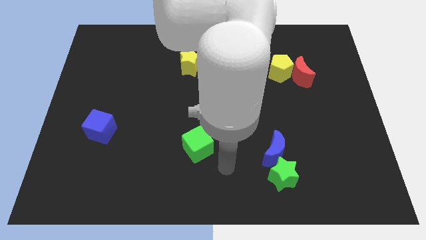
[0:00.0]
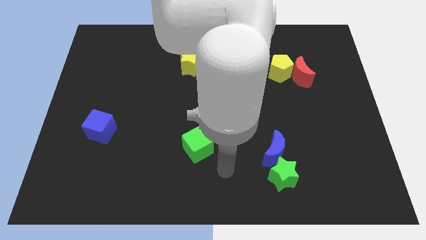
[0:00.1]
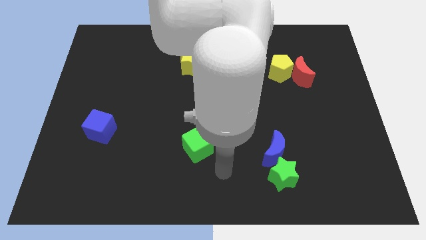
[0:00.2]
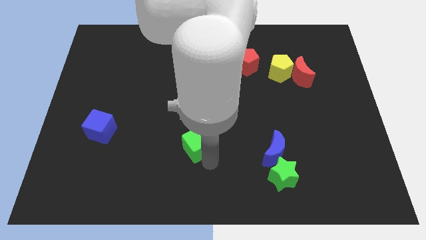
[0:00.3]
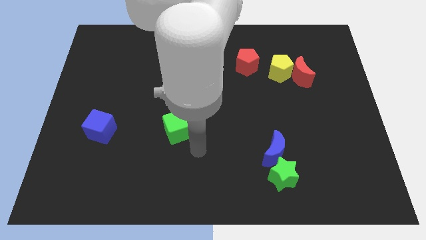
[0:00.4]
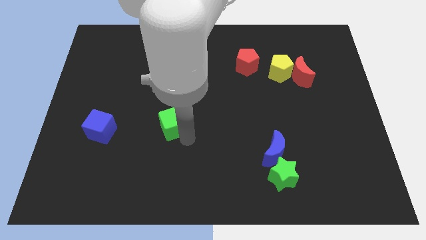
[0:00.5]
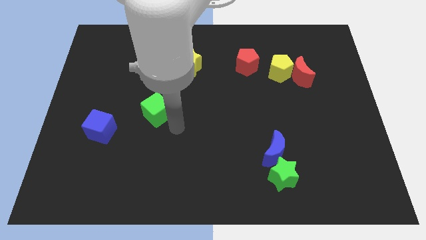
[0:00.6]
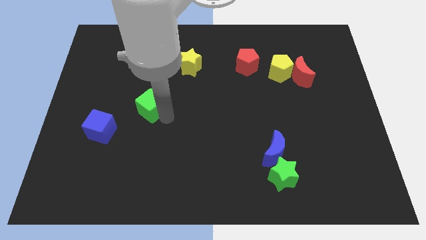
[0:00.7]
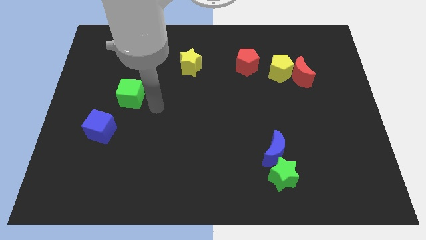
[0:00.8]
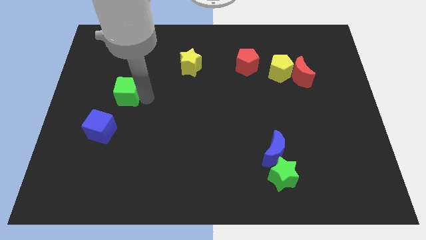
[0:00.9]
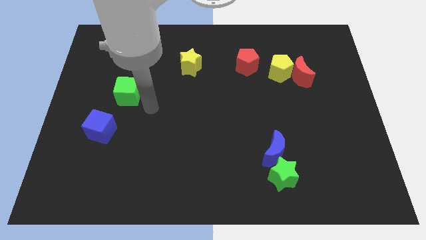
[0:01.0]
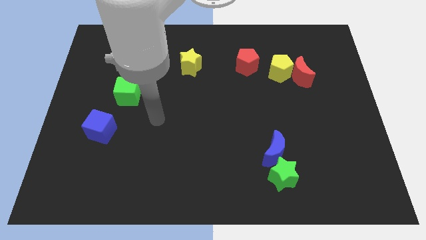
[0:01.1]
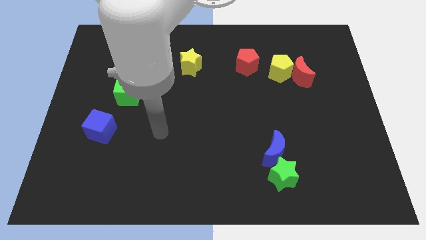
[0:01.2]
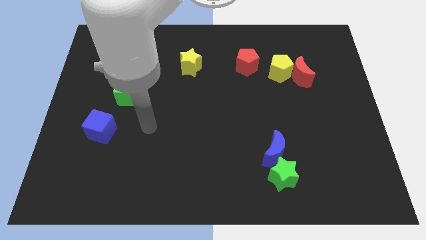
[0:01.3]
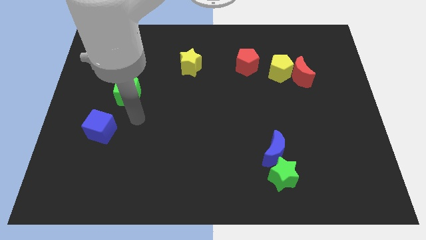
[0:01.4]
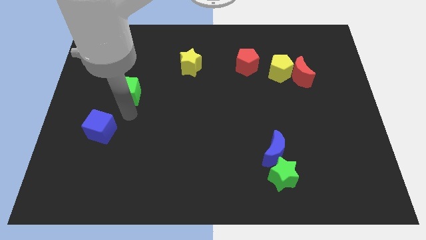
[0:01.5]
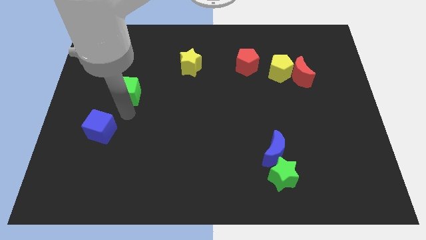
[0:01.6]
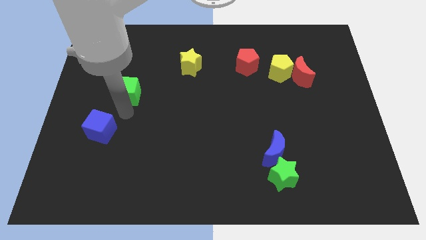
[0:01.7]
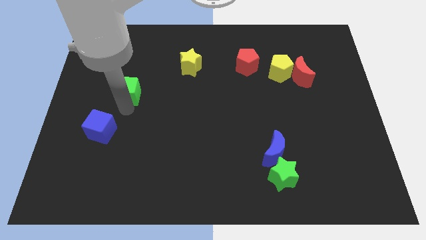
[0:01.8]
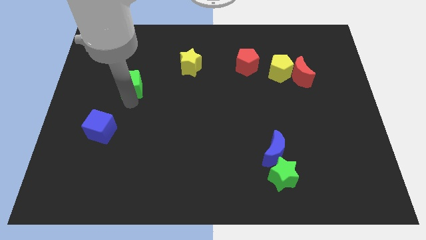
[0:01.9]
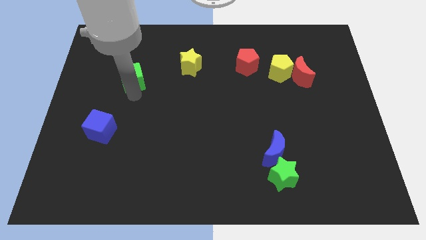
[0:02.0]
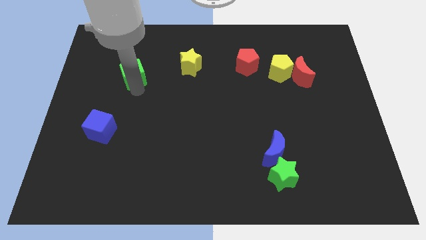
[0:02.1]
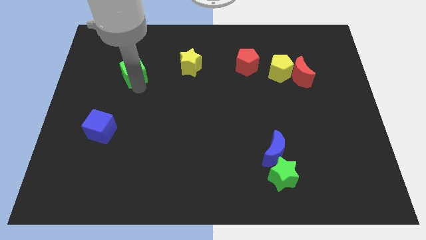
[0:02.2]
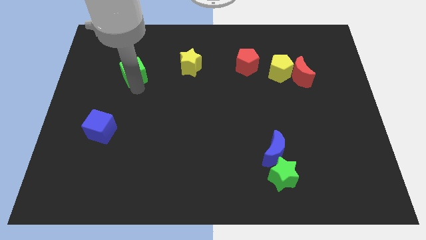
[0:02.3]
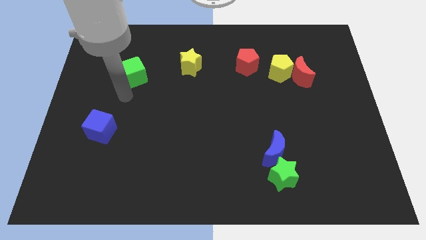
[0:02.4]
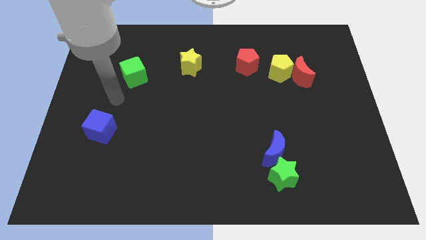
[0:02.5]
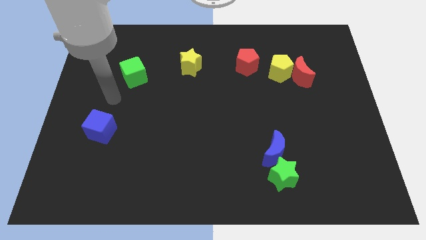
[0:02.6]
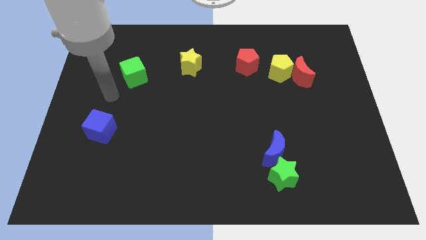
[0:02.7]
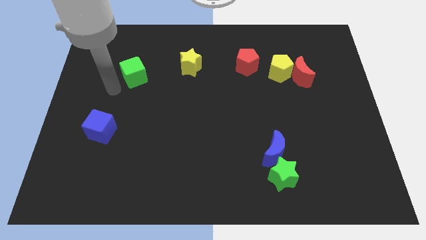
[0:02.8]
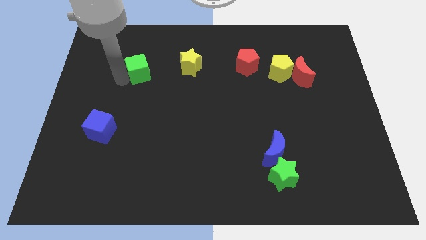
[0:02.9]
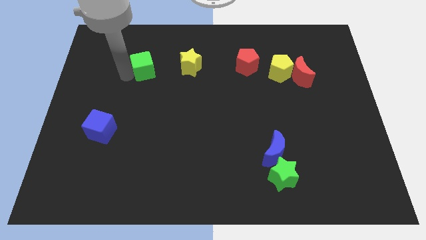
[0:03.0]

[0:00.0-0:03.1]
move the green cube to the left of yellow star

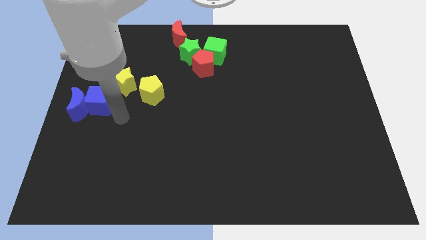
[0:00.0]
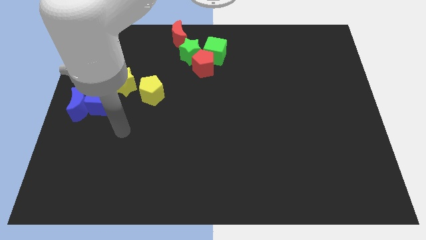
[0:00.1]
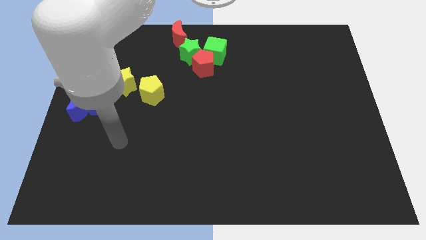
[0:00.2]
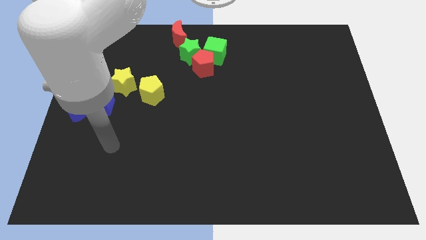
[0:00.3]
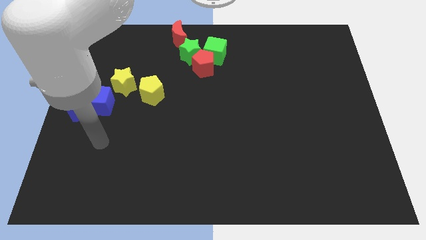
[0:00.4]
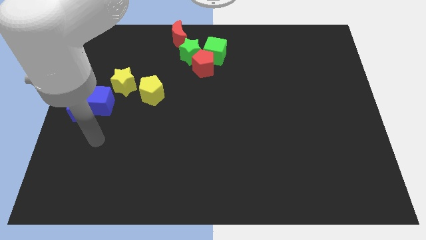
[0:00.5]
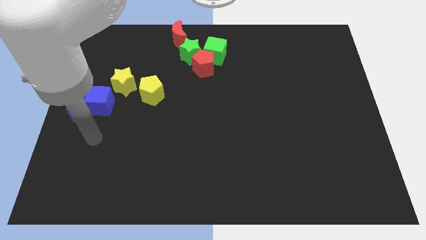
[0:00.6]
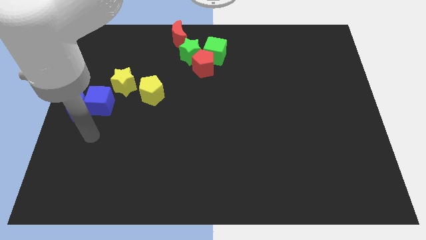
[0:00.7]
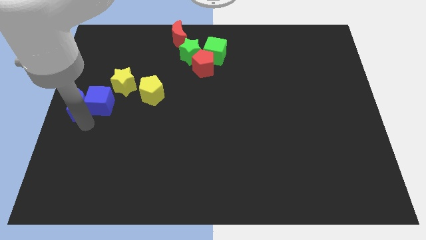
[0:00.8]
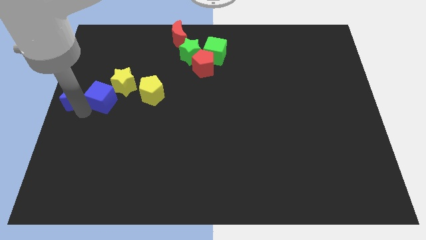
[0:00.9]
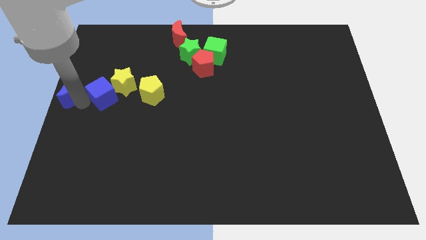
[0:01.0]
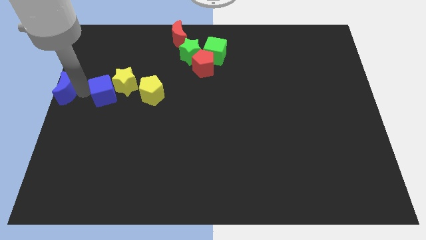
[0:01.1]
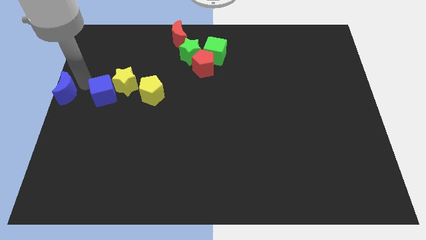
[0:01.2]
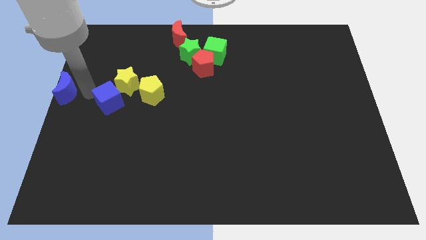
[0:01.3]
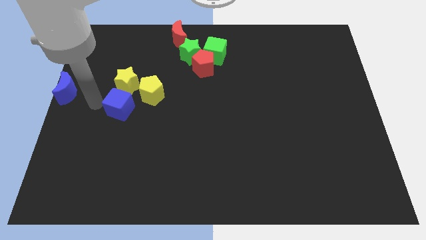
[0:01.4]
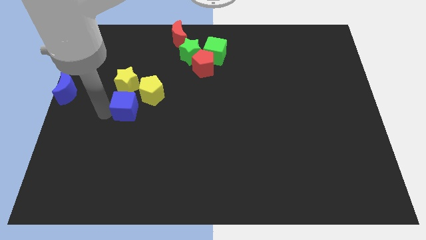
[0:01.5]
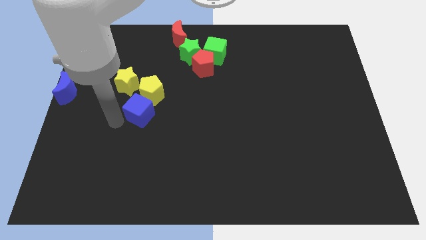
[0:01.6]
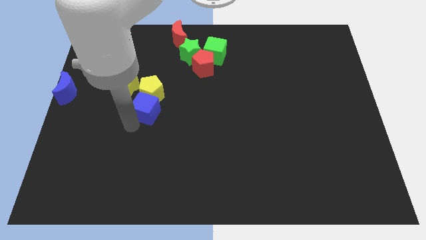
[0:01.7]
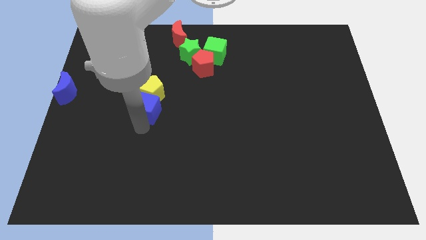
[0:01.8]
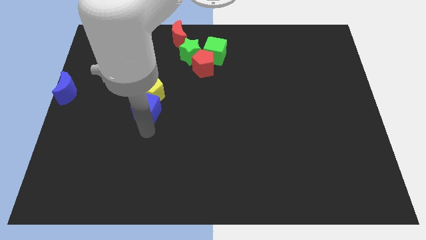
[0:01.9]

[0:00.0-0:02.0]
separate the blue crescent and blue cube

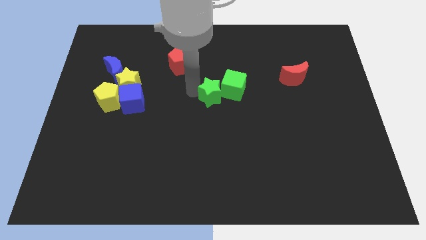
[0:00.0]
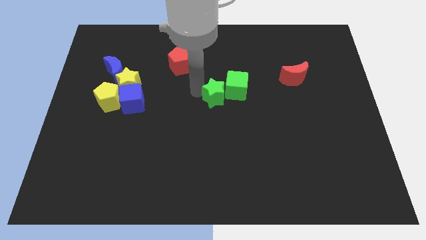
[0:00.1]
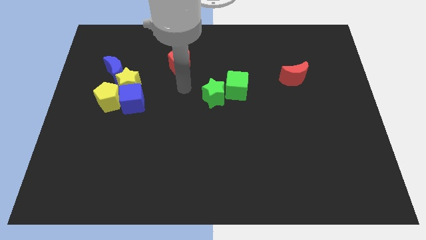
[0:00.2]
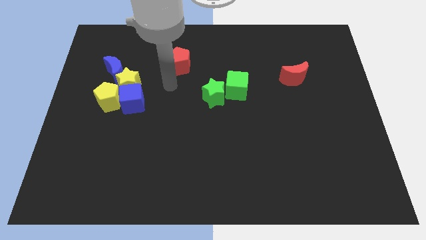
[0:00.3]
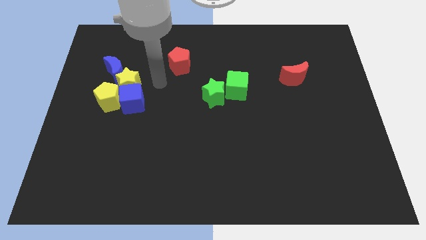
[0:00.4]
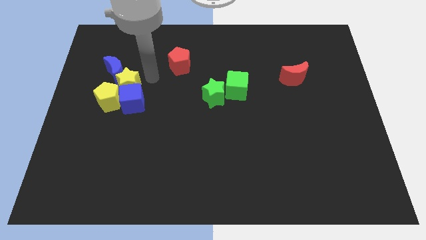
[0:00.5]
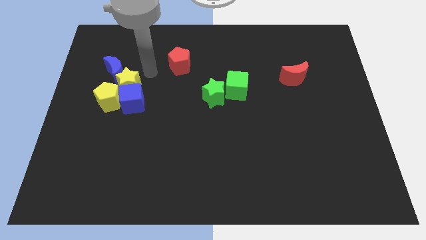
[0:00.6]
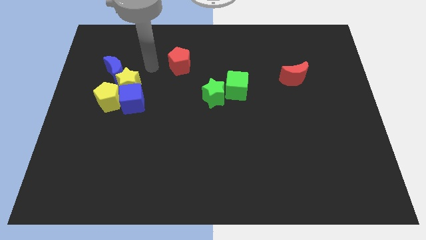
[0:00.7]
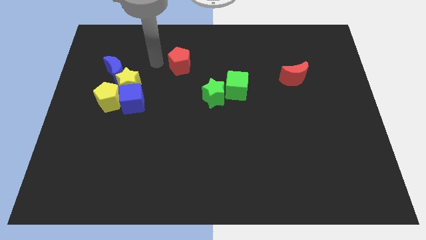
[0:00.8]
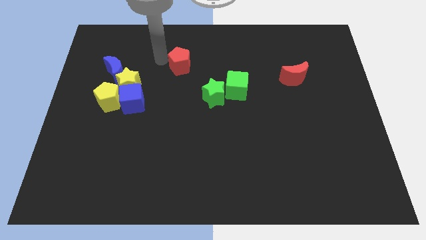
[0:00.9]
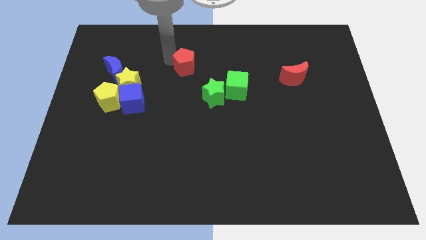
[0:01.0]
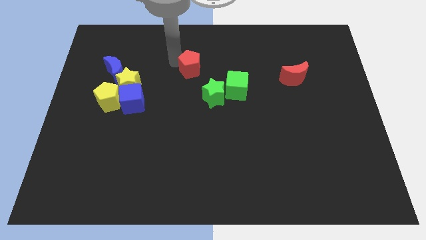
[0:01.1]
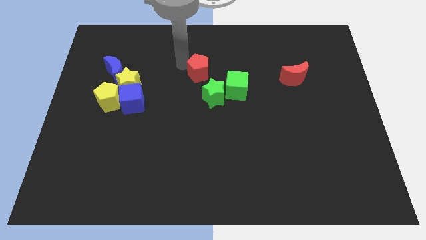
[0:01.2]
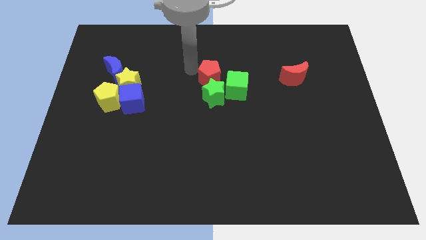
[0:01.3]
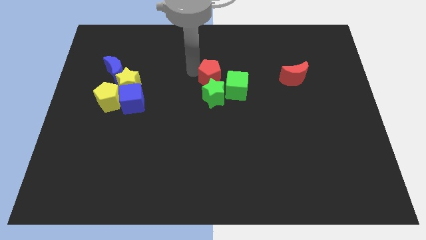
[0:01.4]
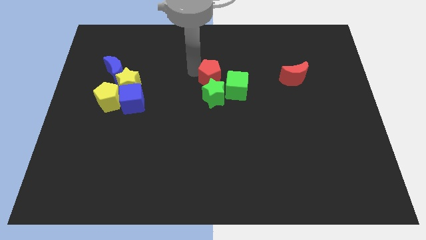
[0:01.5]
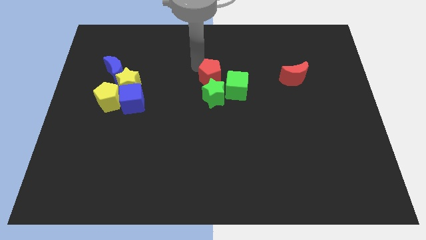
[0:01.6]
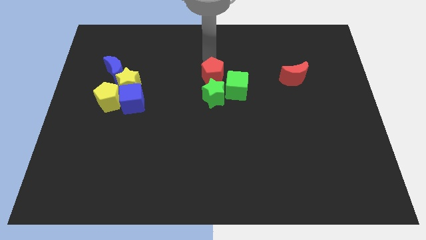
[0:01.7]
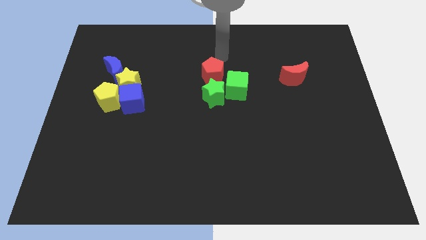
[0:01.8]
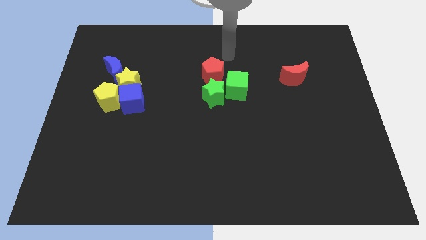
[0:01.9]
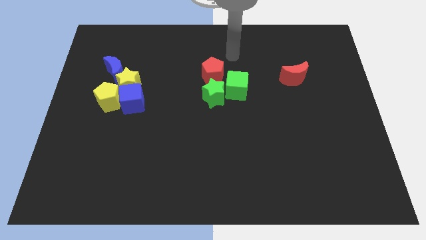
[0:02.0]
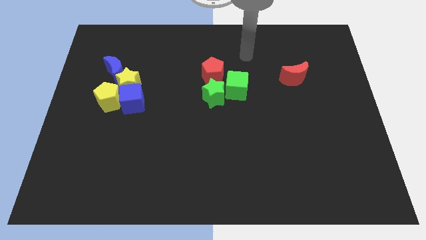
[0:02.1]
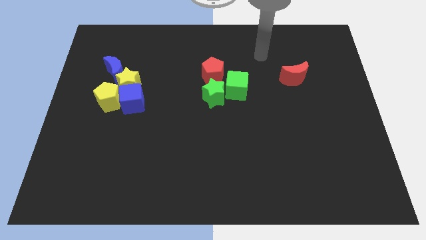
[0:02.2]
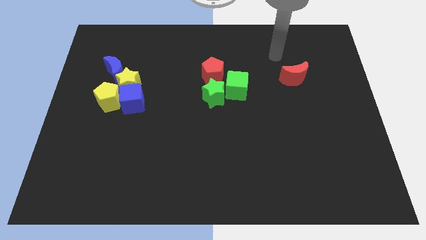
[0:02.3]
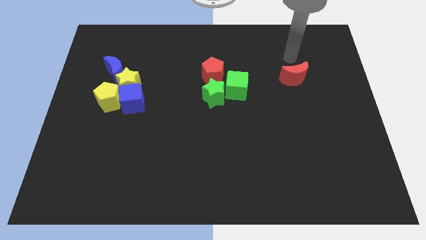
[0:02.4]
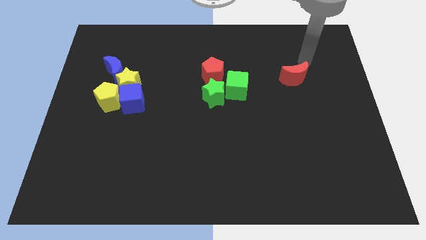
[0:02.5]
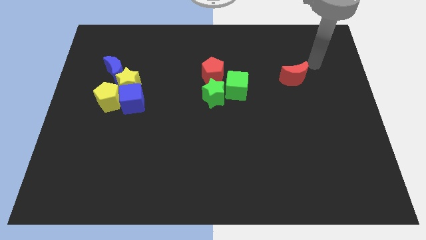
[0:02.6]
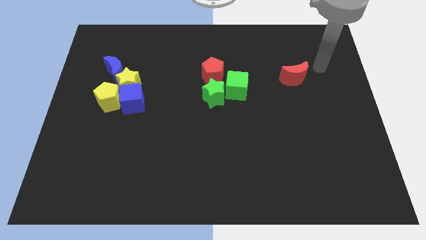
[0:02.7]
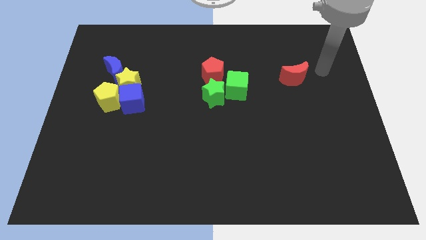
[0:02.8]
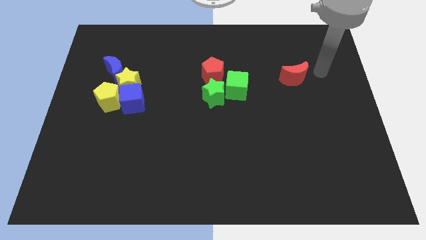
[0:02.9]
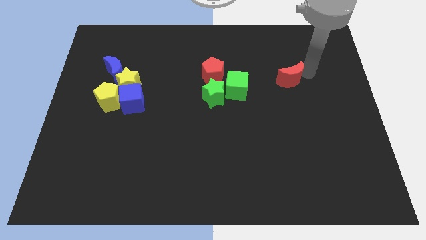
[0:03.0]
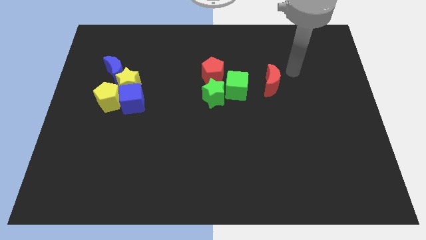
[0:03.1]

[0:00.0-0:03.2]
push the red pentagon at the top side of the green star

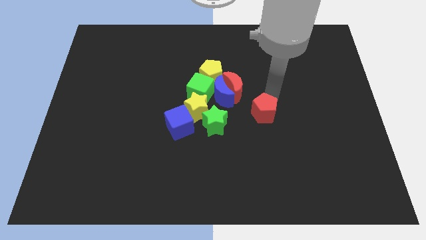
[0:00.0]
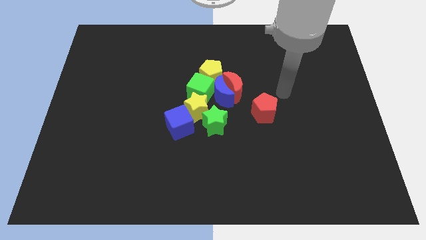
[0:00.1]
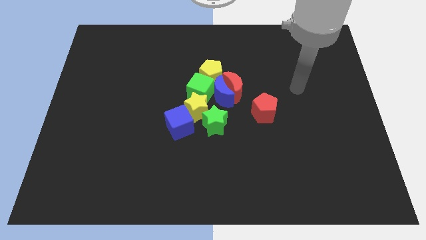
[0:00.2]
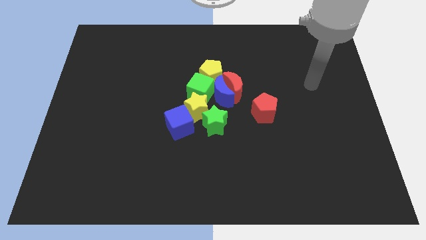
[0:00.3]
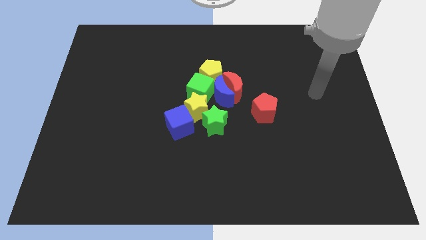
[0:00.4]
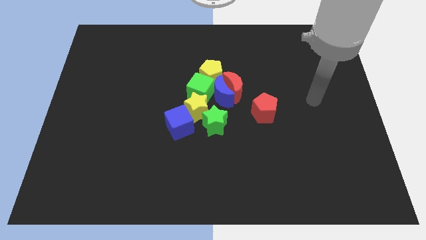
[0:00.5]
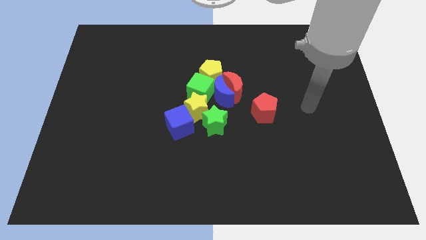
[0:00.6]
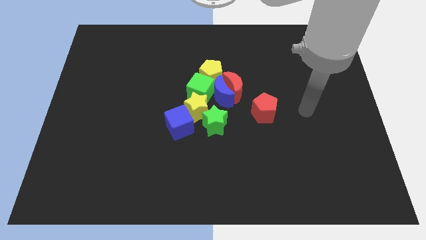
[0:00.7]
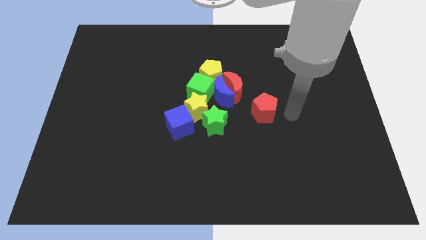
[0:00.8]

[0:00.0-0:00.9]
place your arm to the right side of red pentagon
